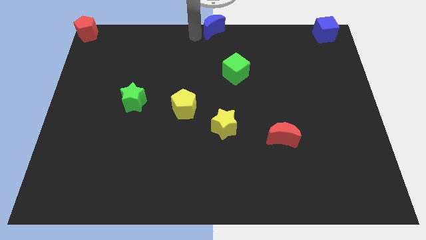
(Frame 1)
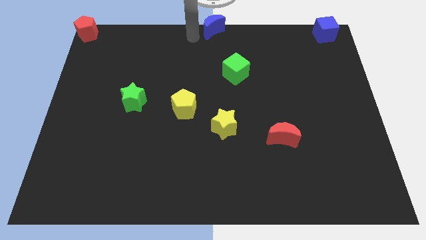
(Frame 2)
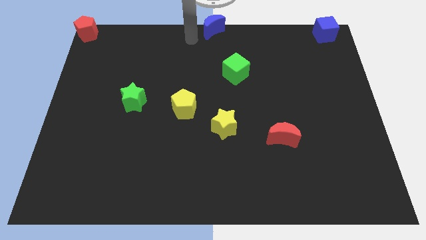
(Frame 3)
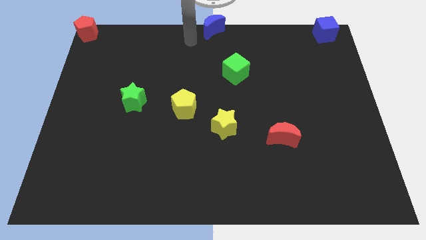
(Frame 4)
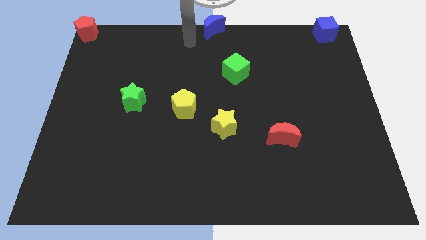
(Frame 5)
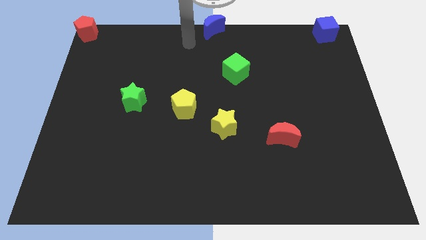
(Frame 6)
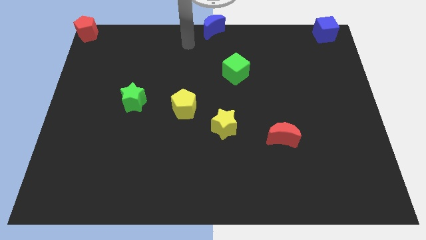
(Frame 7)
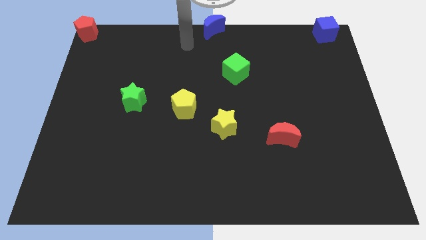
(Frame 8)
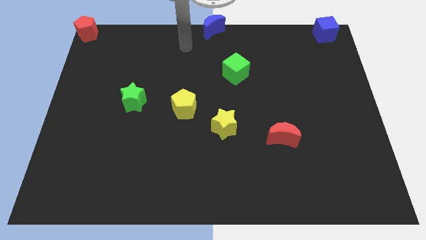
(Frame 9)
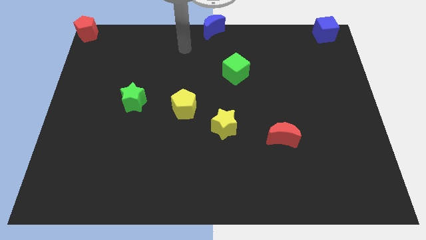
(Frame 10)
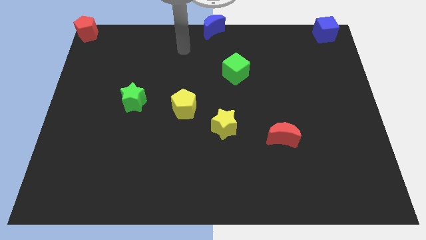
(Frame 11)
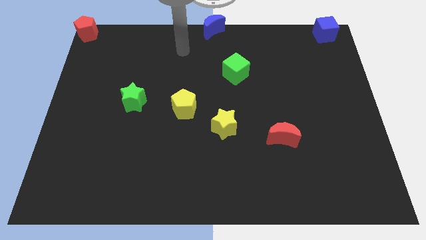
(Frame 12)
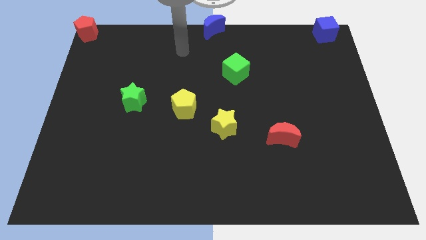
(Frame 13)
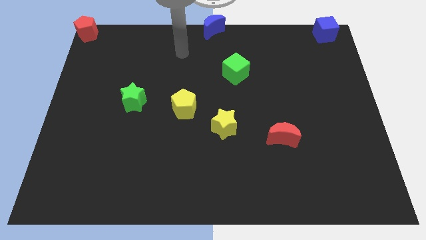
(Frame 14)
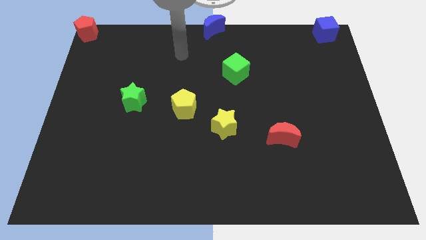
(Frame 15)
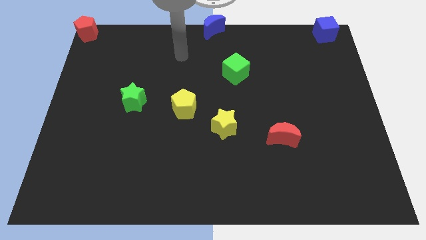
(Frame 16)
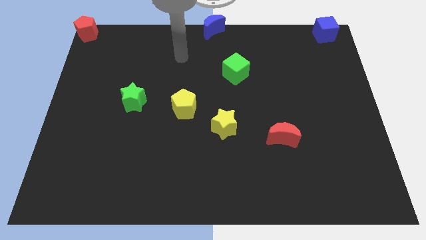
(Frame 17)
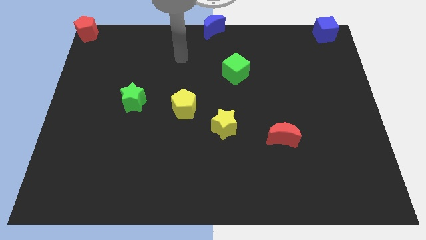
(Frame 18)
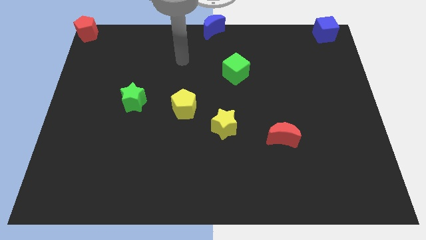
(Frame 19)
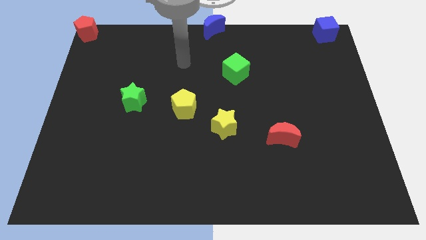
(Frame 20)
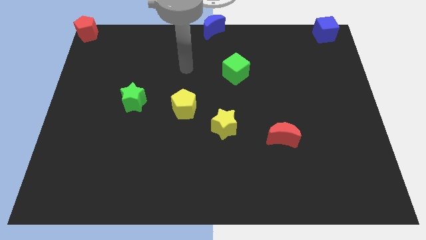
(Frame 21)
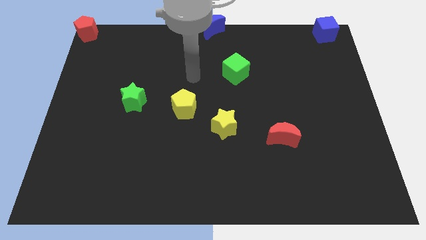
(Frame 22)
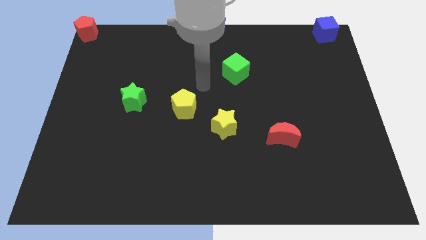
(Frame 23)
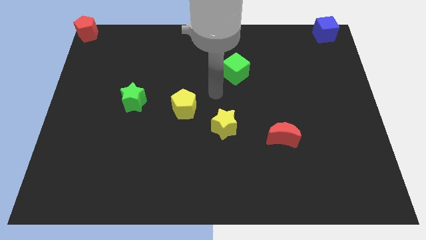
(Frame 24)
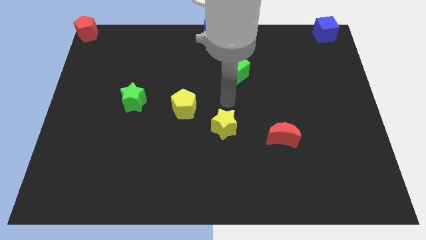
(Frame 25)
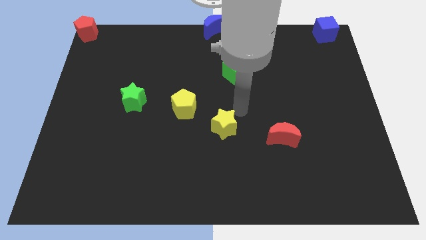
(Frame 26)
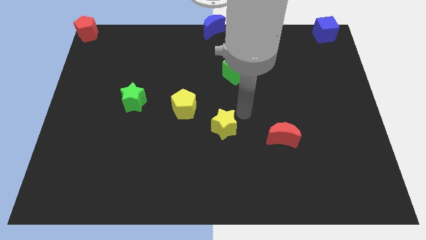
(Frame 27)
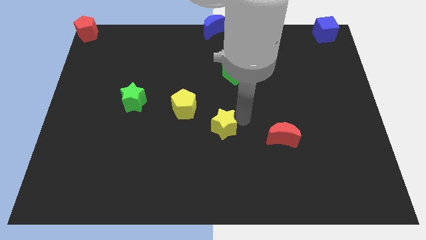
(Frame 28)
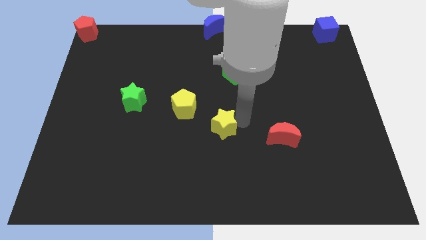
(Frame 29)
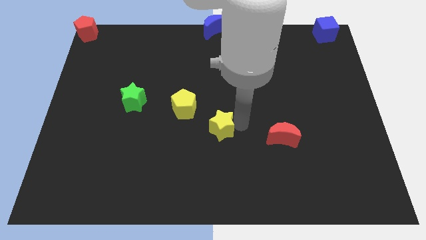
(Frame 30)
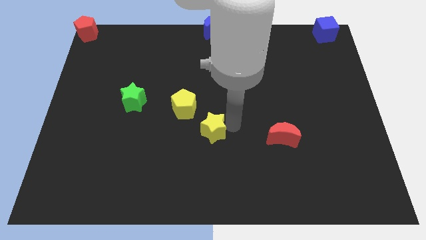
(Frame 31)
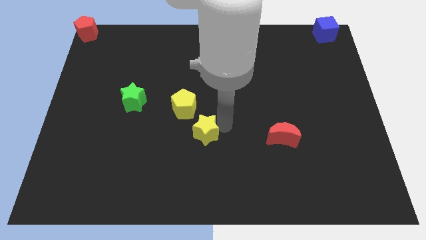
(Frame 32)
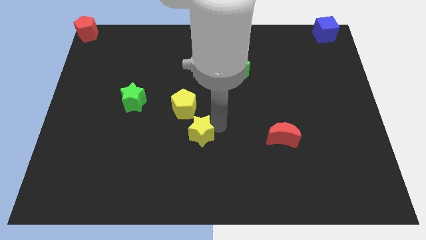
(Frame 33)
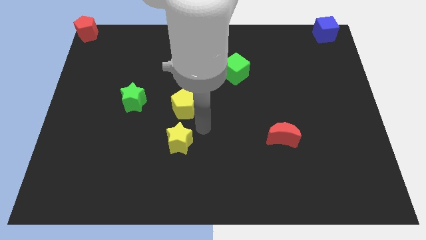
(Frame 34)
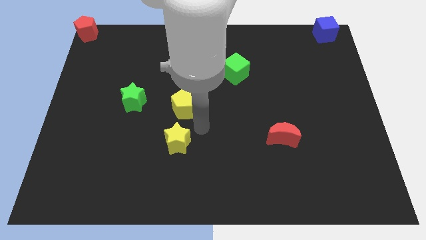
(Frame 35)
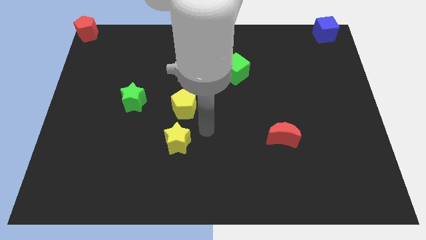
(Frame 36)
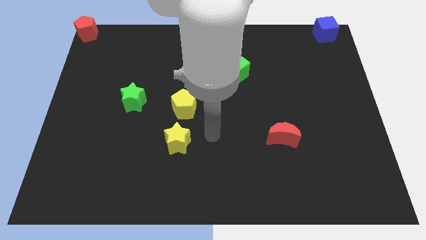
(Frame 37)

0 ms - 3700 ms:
place the yellow star vertically below the yellow pentagon

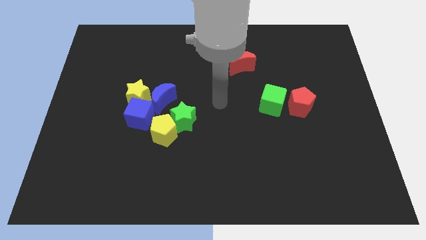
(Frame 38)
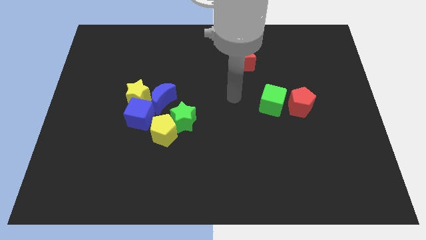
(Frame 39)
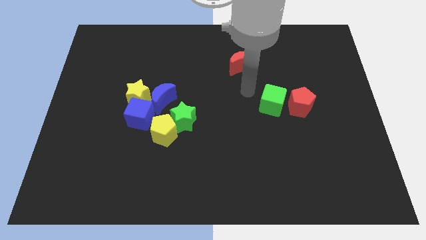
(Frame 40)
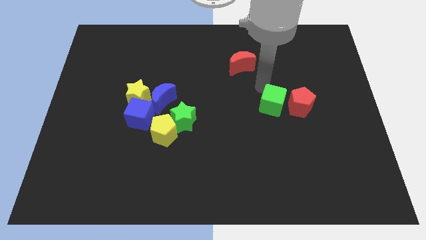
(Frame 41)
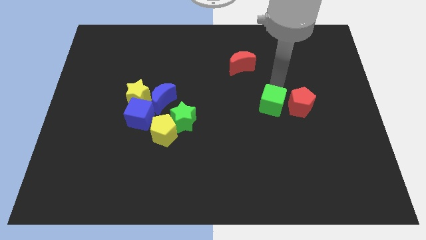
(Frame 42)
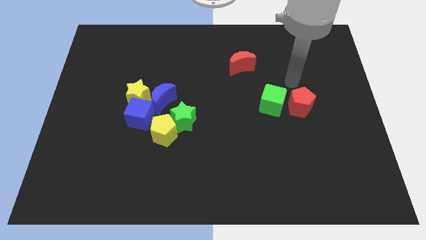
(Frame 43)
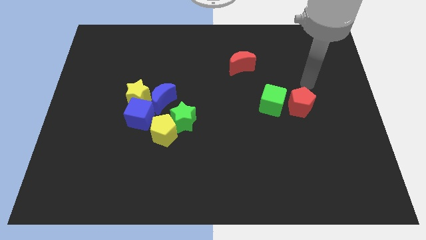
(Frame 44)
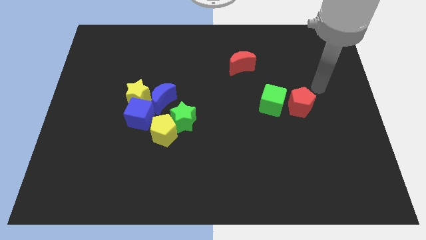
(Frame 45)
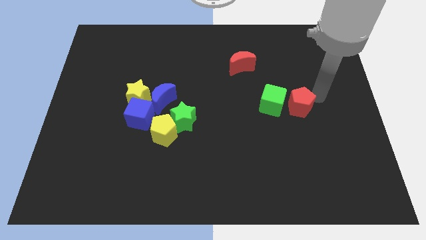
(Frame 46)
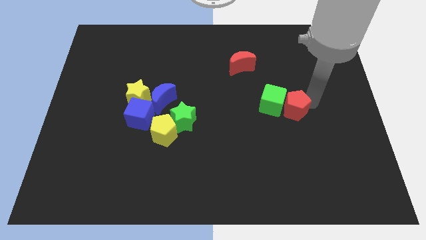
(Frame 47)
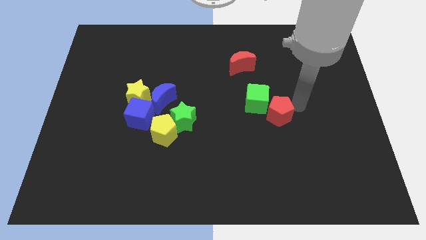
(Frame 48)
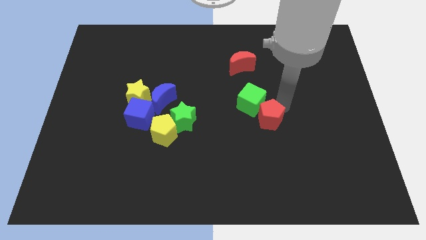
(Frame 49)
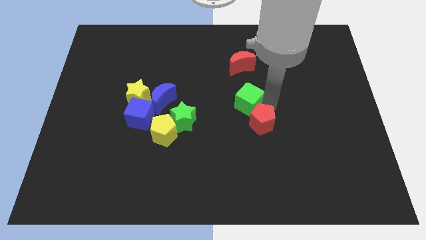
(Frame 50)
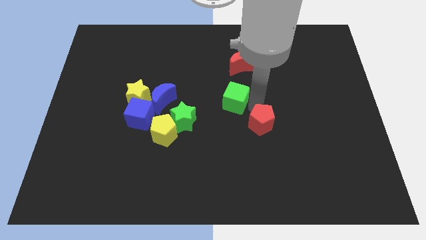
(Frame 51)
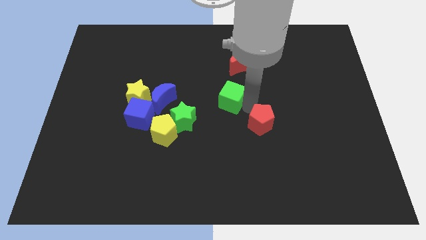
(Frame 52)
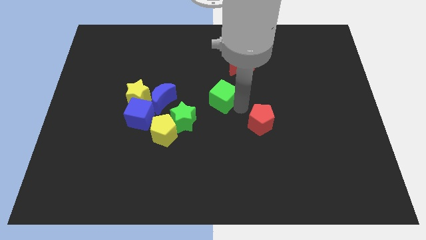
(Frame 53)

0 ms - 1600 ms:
place green cube to the center of the board

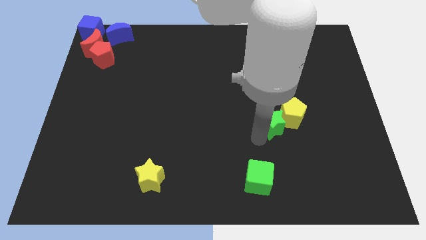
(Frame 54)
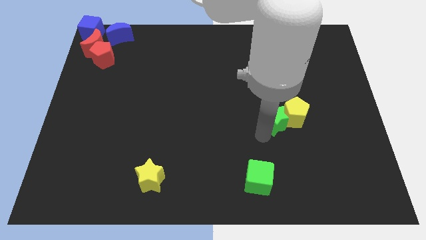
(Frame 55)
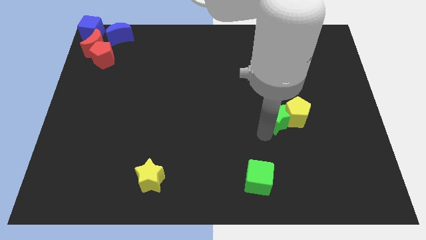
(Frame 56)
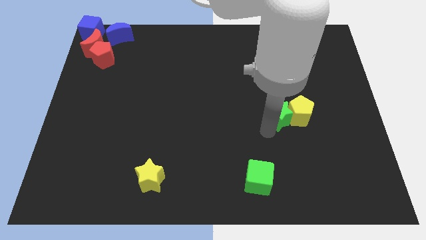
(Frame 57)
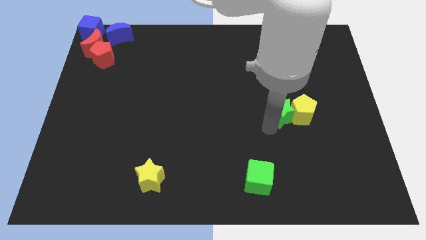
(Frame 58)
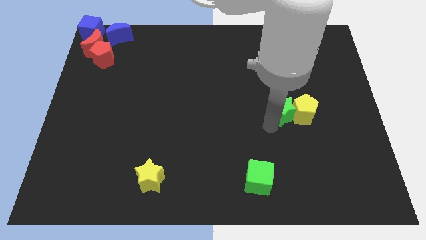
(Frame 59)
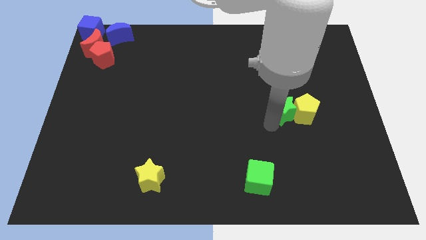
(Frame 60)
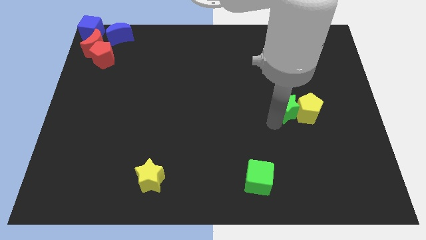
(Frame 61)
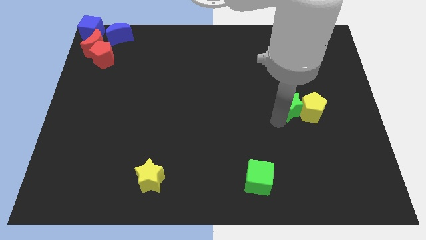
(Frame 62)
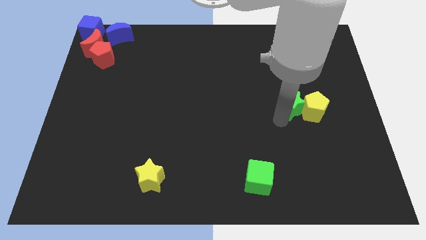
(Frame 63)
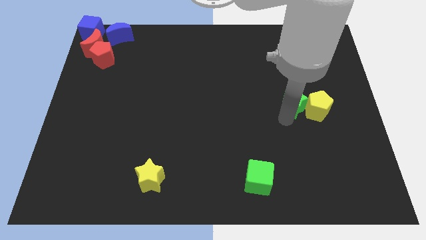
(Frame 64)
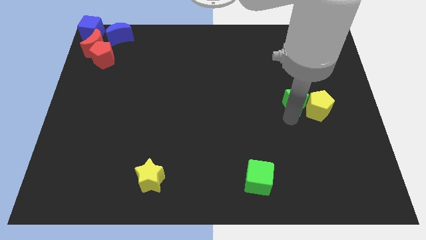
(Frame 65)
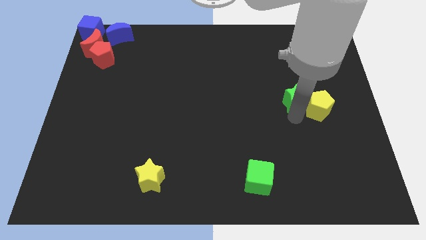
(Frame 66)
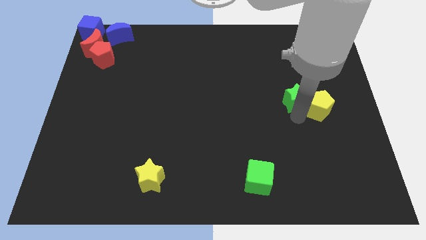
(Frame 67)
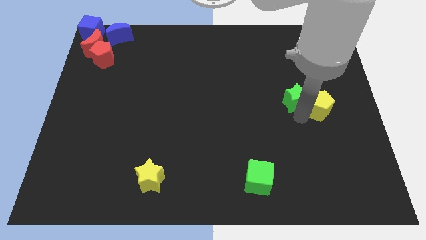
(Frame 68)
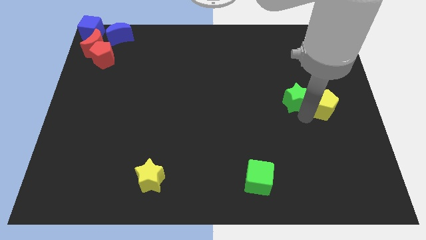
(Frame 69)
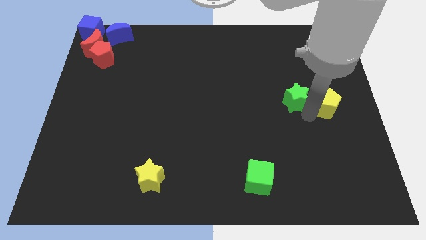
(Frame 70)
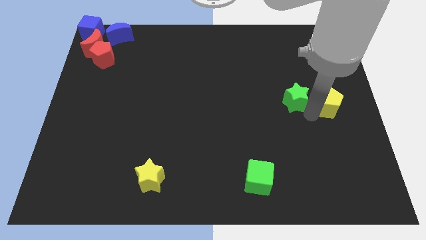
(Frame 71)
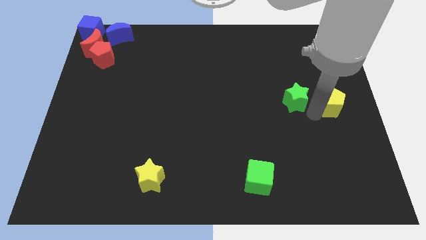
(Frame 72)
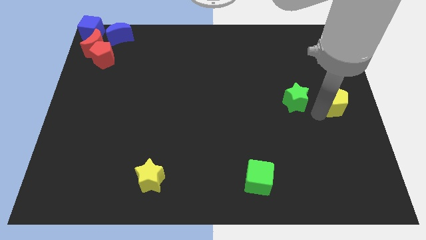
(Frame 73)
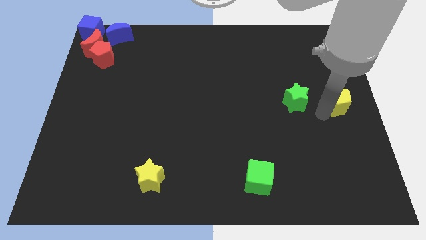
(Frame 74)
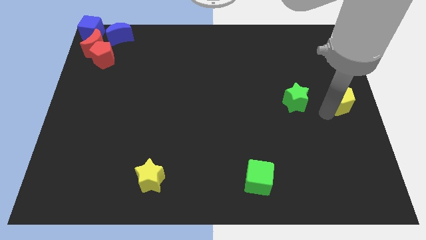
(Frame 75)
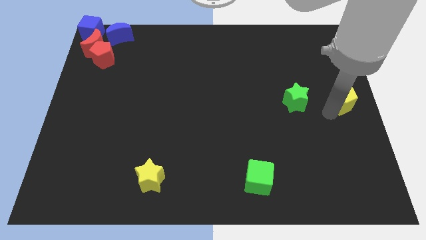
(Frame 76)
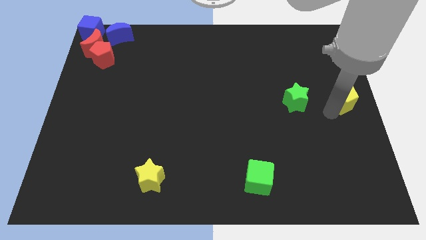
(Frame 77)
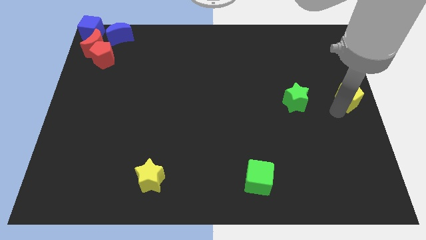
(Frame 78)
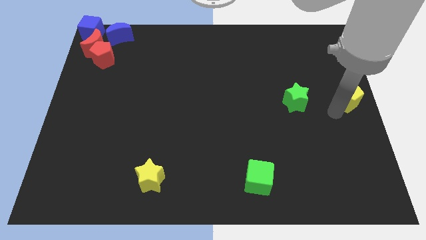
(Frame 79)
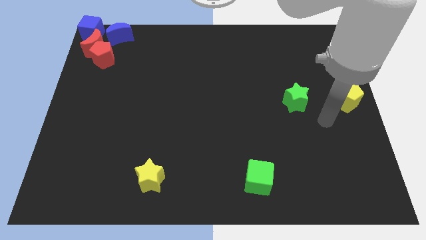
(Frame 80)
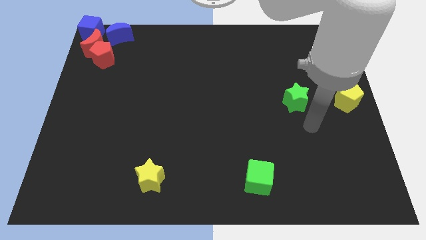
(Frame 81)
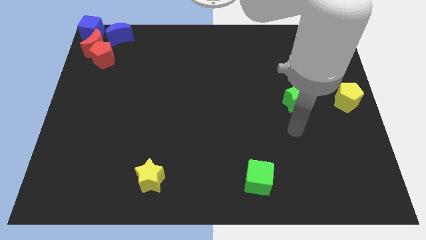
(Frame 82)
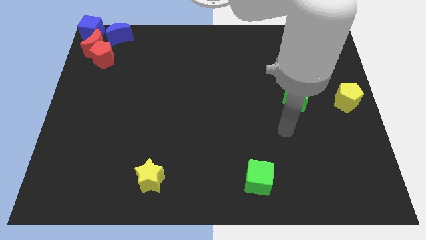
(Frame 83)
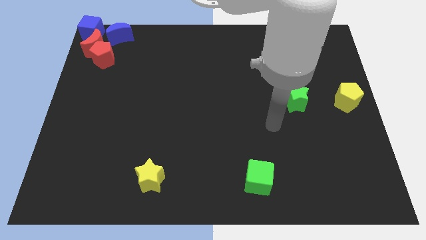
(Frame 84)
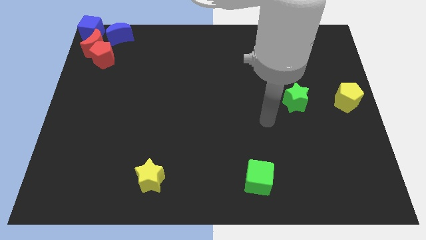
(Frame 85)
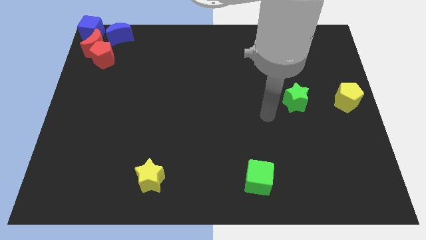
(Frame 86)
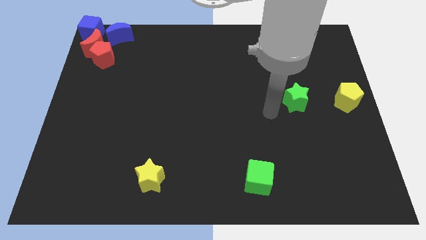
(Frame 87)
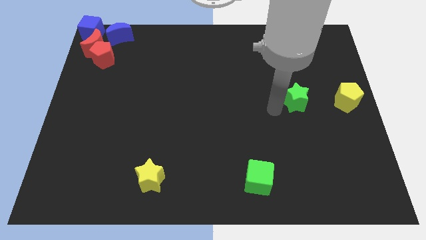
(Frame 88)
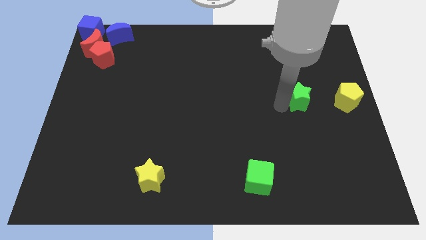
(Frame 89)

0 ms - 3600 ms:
separate yellow pentagon from green star

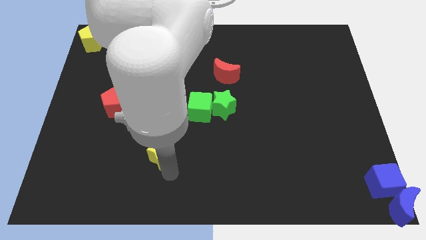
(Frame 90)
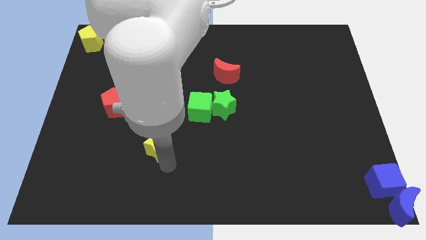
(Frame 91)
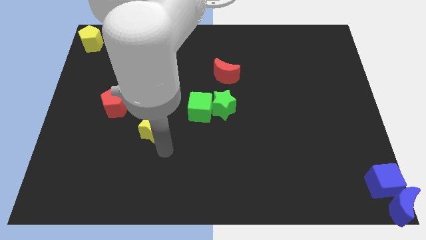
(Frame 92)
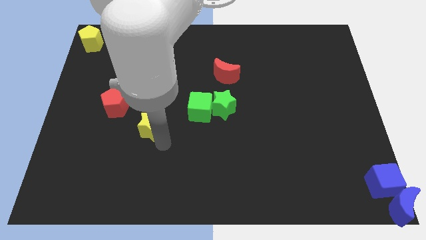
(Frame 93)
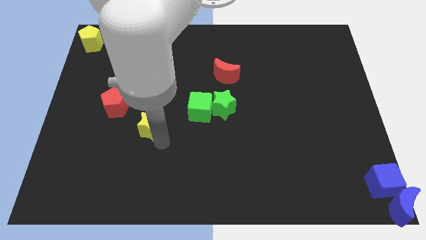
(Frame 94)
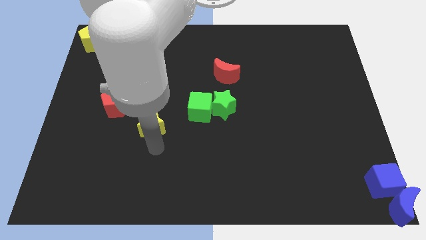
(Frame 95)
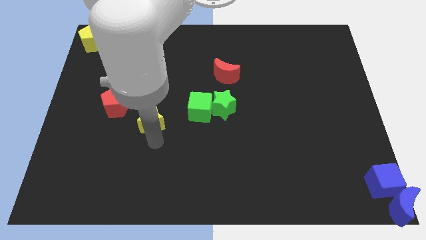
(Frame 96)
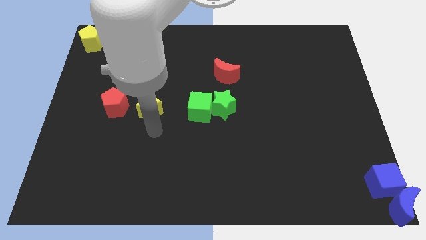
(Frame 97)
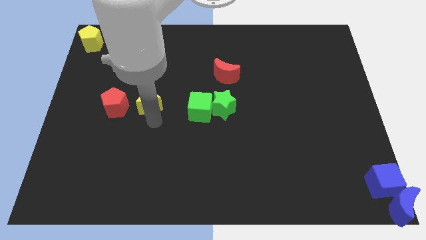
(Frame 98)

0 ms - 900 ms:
place the yellow star to the right of the red pentagon
